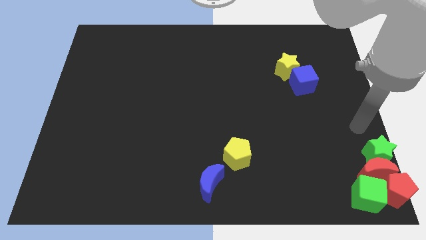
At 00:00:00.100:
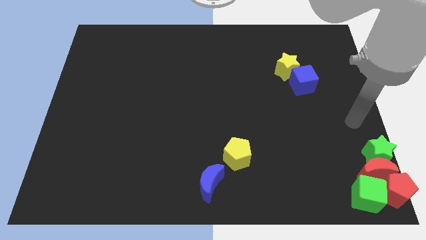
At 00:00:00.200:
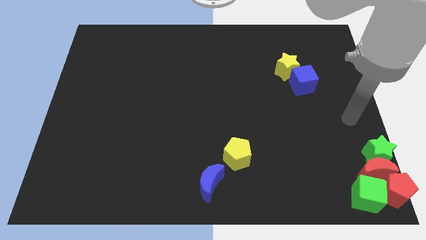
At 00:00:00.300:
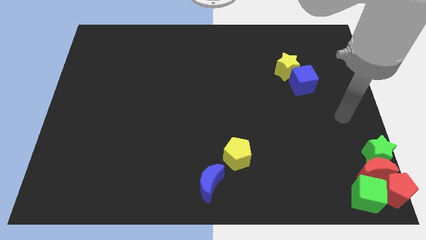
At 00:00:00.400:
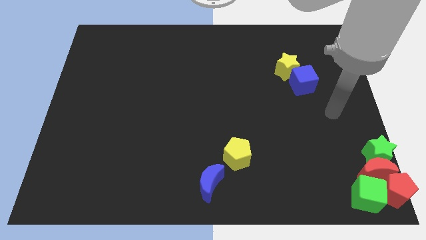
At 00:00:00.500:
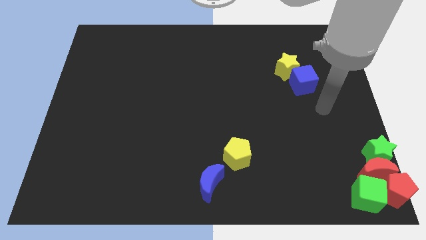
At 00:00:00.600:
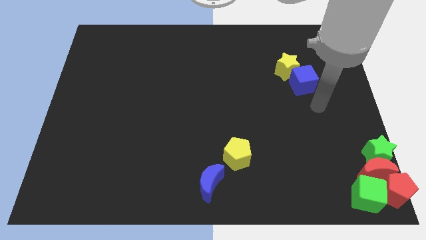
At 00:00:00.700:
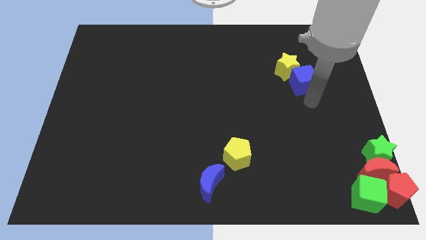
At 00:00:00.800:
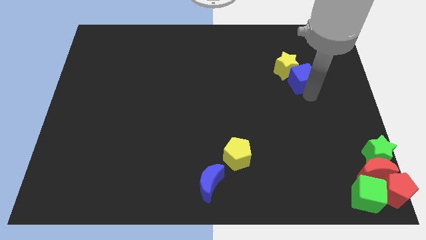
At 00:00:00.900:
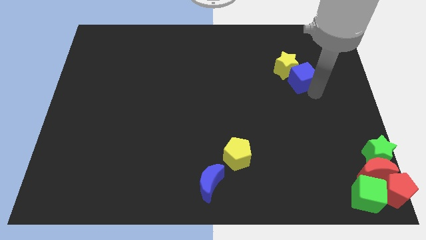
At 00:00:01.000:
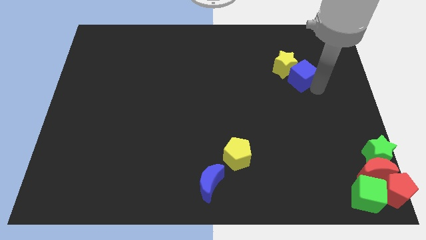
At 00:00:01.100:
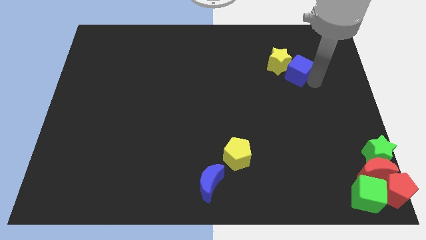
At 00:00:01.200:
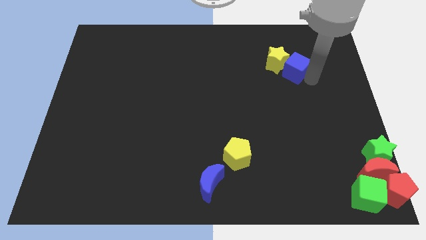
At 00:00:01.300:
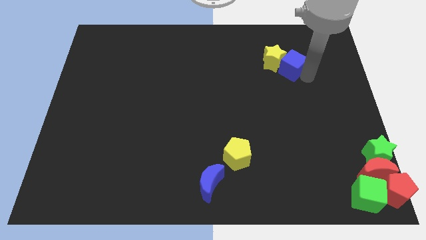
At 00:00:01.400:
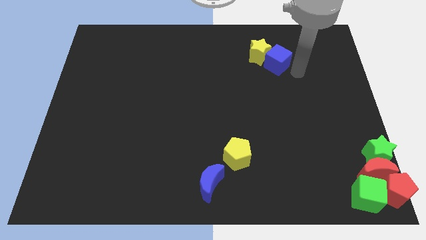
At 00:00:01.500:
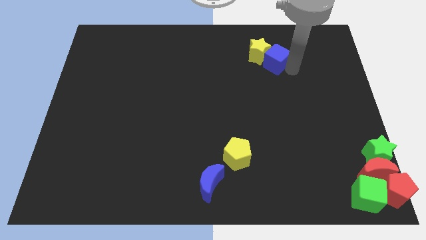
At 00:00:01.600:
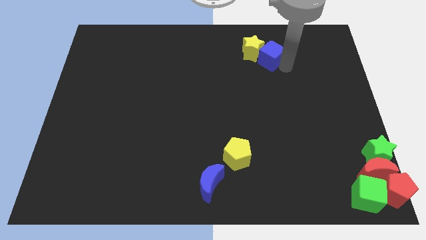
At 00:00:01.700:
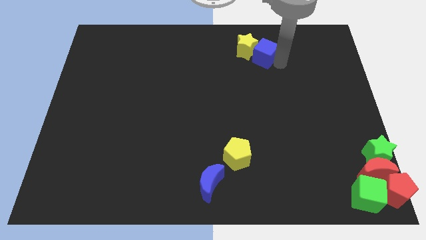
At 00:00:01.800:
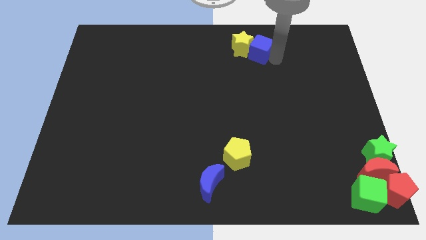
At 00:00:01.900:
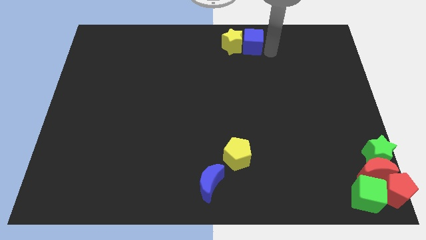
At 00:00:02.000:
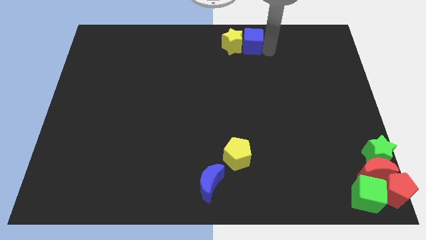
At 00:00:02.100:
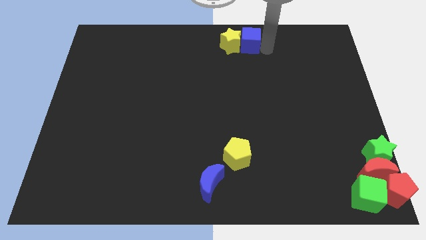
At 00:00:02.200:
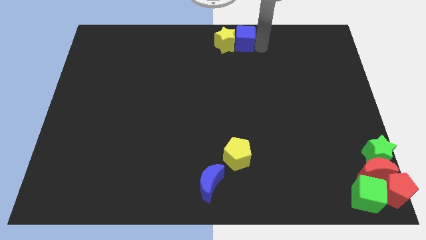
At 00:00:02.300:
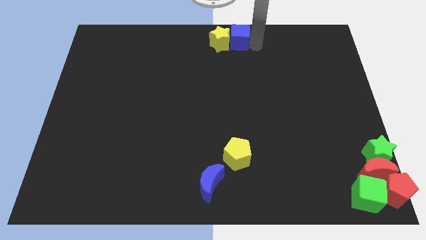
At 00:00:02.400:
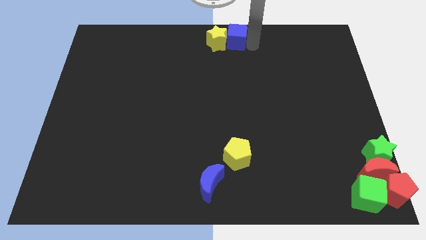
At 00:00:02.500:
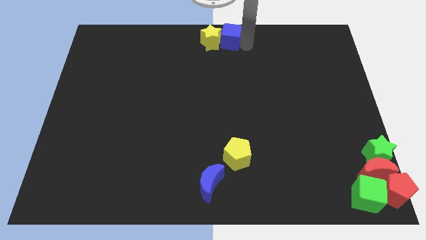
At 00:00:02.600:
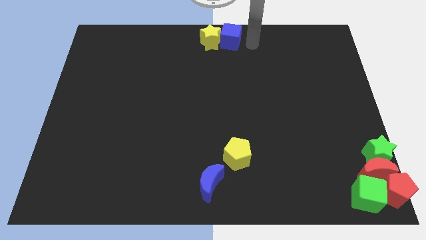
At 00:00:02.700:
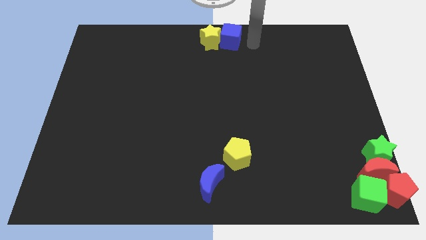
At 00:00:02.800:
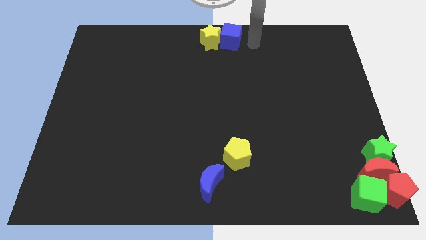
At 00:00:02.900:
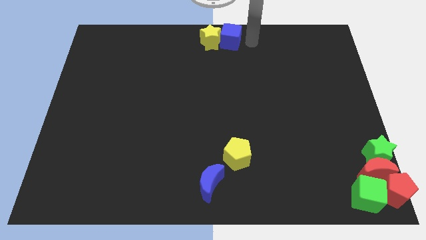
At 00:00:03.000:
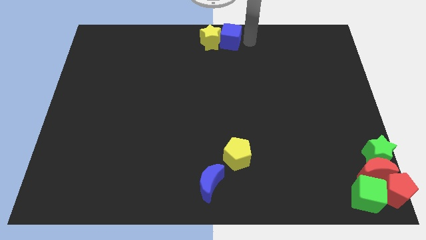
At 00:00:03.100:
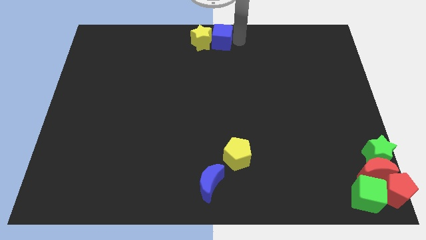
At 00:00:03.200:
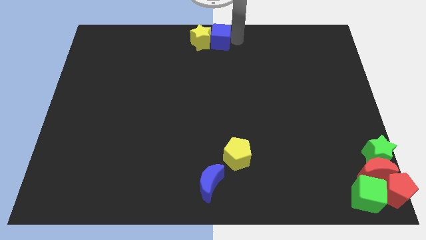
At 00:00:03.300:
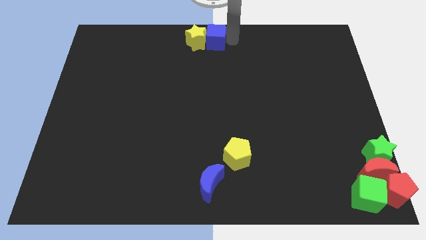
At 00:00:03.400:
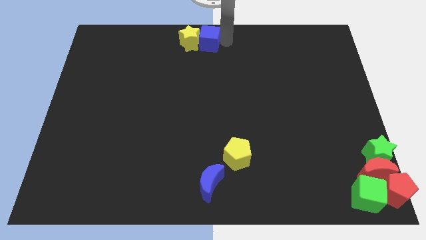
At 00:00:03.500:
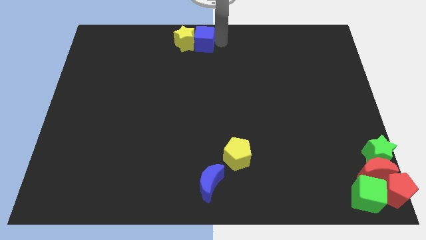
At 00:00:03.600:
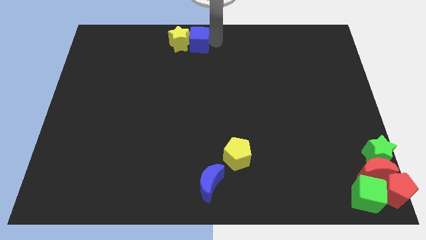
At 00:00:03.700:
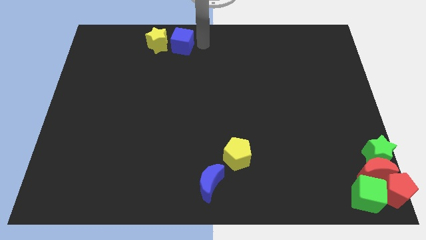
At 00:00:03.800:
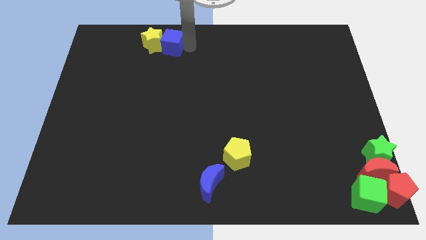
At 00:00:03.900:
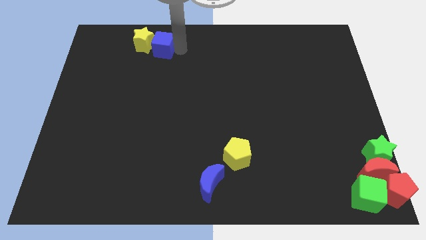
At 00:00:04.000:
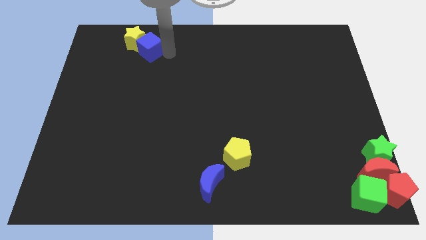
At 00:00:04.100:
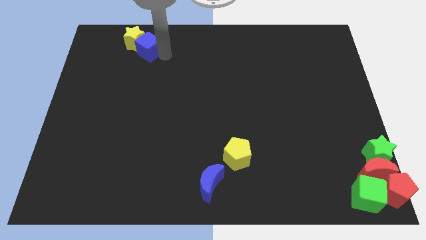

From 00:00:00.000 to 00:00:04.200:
push the blue cube along with the yellow star to the left

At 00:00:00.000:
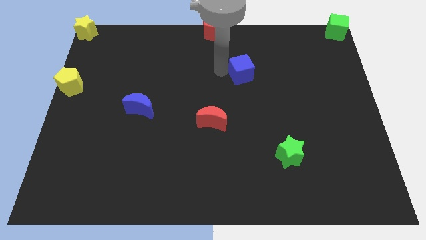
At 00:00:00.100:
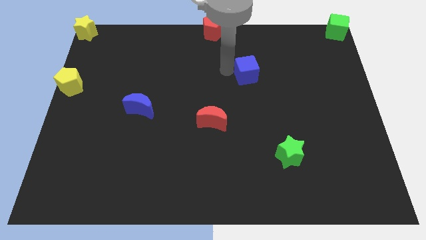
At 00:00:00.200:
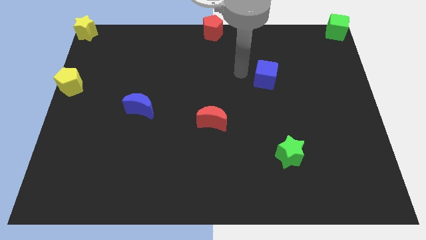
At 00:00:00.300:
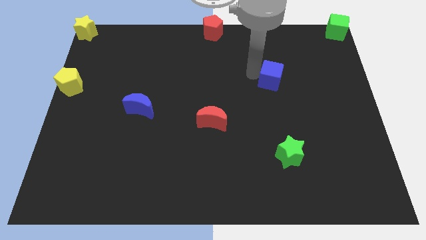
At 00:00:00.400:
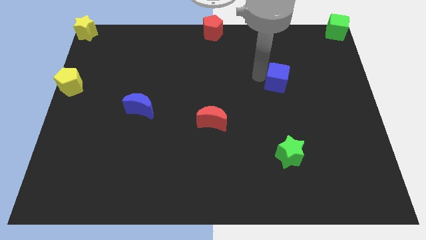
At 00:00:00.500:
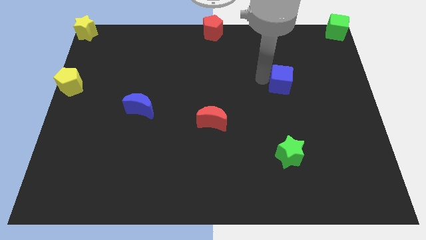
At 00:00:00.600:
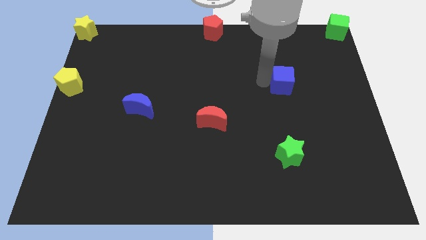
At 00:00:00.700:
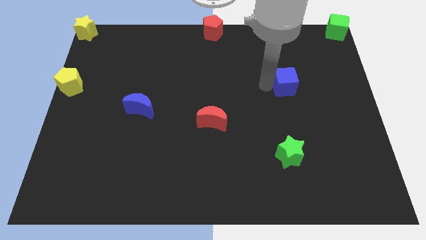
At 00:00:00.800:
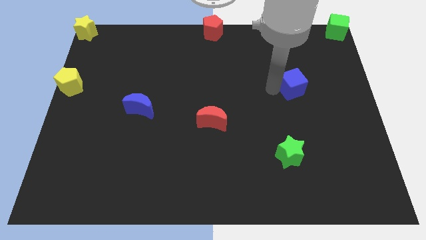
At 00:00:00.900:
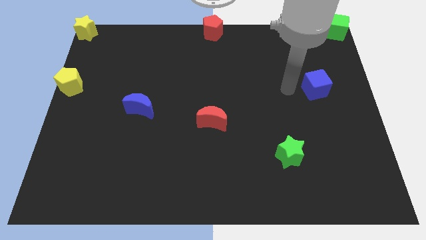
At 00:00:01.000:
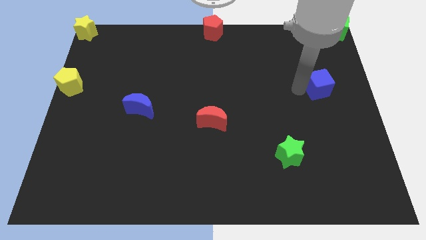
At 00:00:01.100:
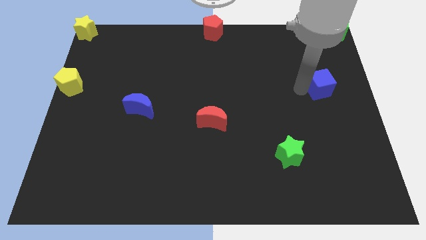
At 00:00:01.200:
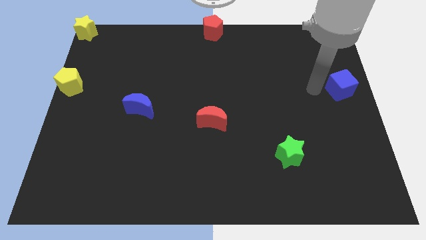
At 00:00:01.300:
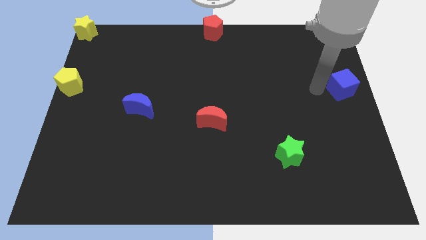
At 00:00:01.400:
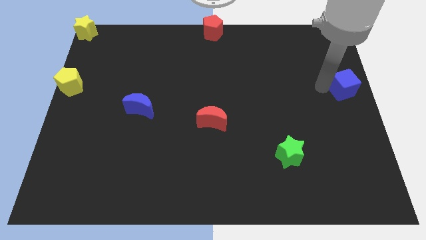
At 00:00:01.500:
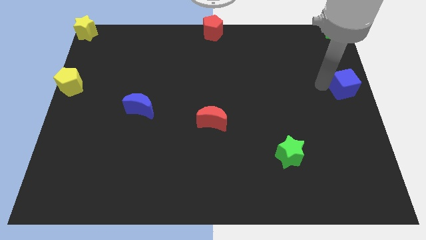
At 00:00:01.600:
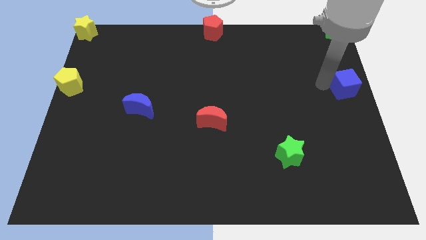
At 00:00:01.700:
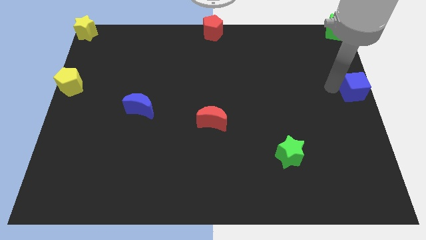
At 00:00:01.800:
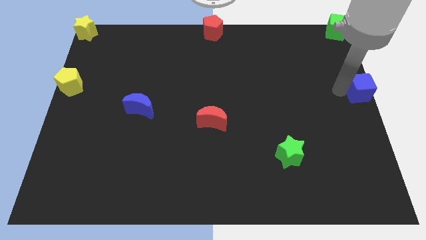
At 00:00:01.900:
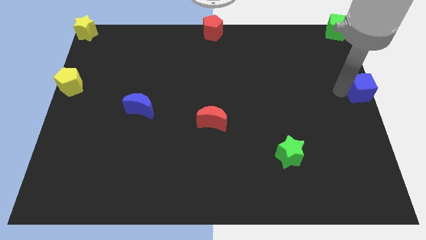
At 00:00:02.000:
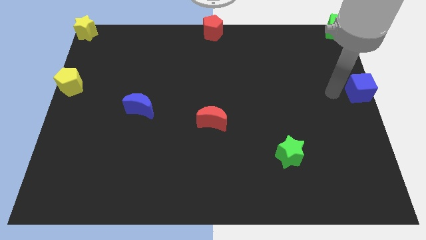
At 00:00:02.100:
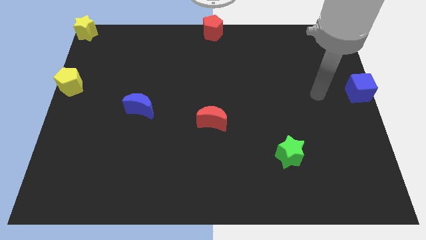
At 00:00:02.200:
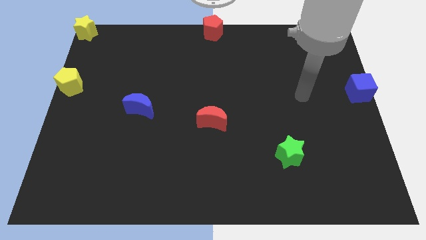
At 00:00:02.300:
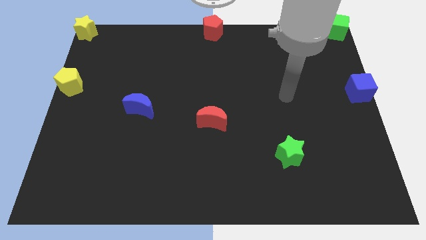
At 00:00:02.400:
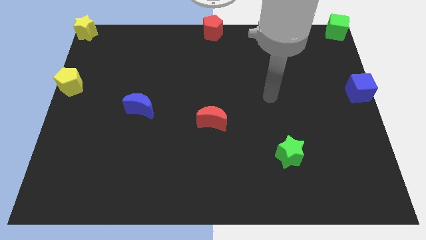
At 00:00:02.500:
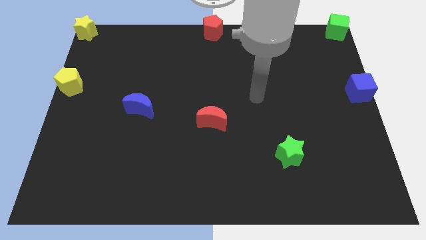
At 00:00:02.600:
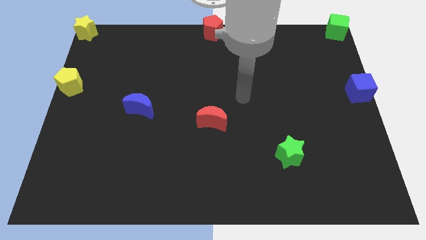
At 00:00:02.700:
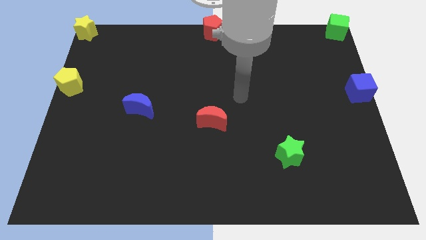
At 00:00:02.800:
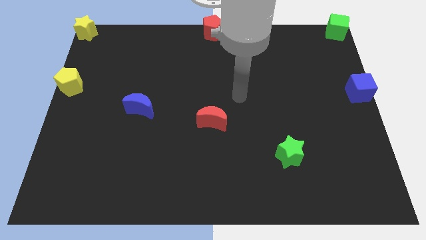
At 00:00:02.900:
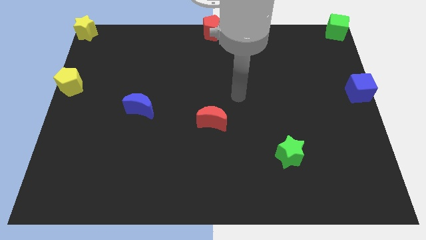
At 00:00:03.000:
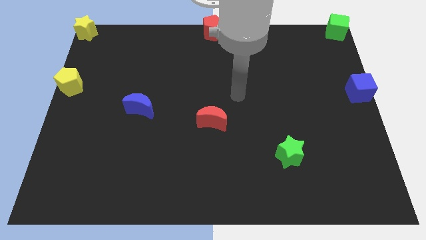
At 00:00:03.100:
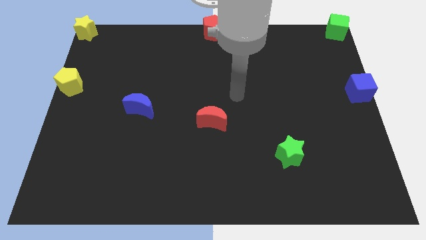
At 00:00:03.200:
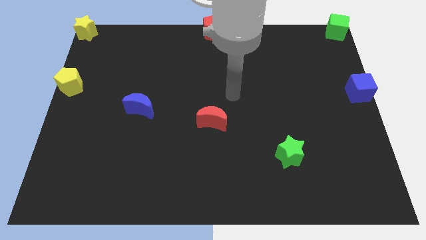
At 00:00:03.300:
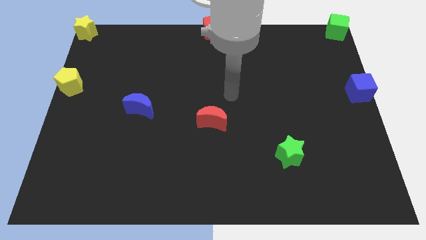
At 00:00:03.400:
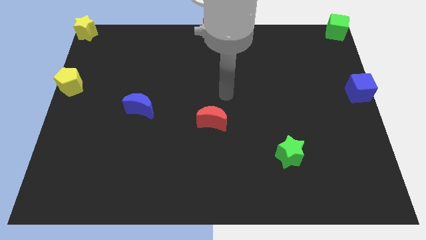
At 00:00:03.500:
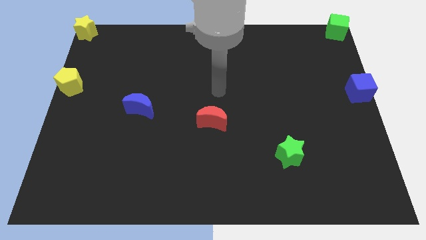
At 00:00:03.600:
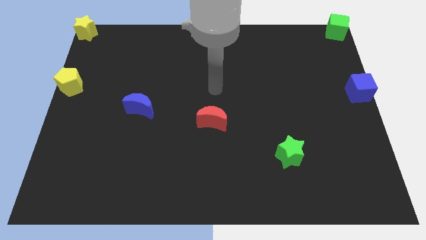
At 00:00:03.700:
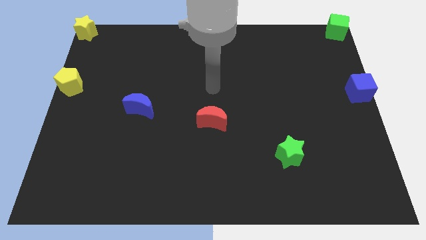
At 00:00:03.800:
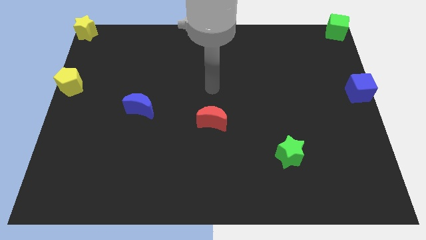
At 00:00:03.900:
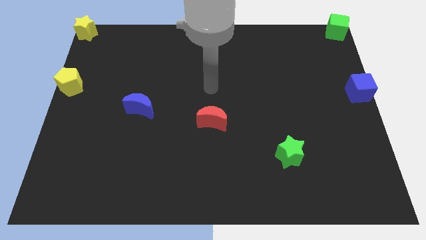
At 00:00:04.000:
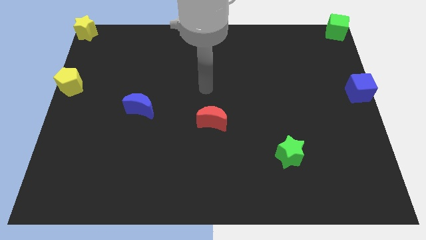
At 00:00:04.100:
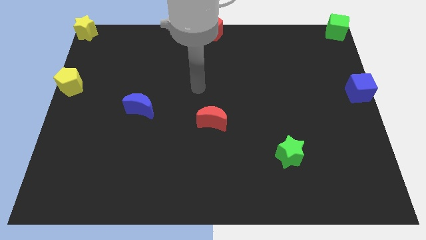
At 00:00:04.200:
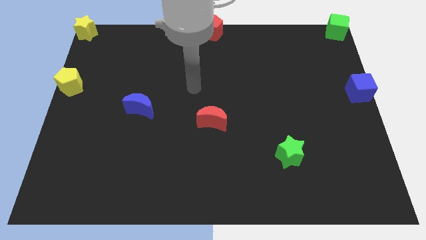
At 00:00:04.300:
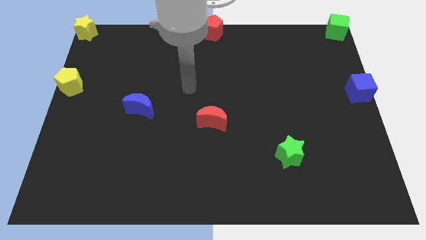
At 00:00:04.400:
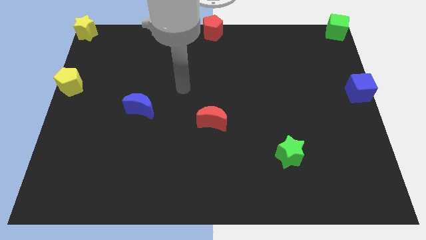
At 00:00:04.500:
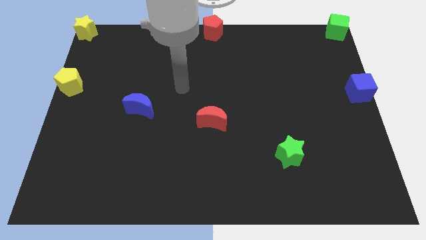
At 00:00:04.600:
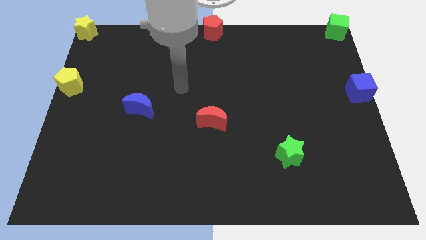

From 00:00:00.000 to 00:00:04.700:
move the blue cube towards the center right
